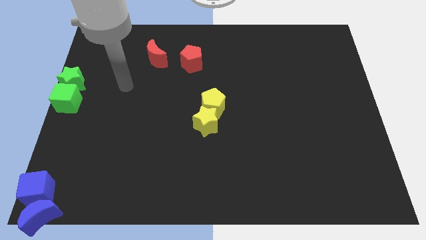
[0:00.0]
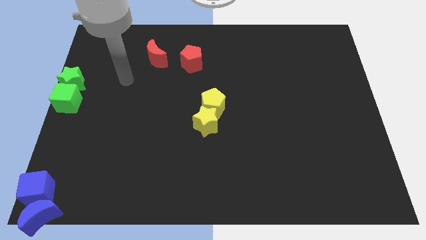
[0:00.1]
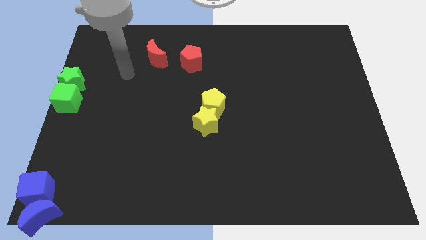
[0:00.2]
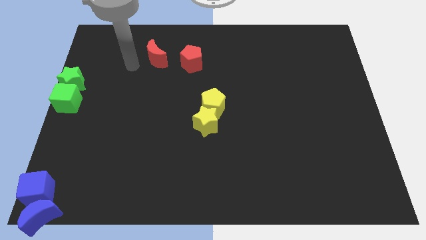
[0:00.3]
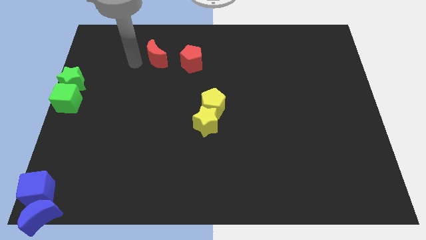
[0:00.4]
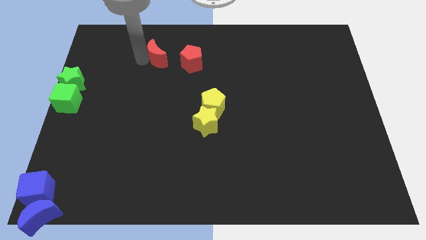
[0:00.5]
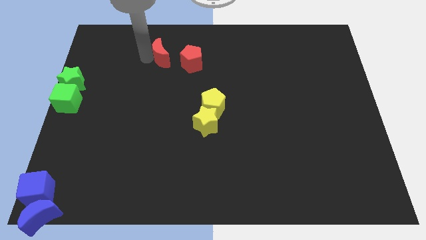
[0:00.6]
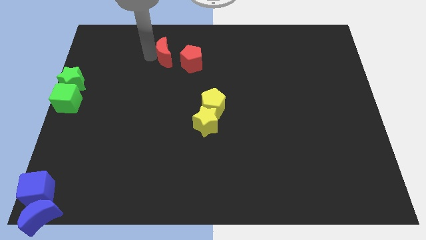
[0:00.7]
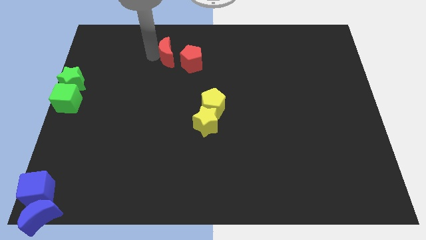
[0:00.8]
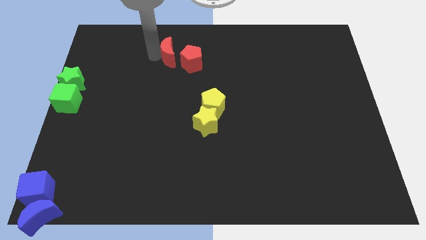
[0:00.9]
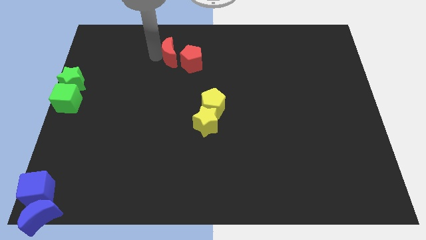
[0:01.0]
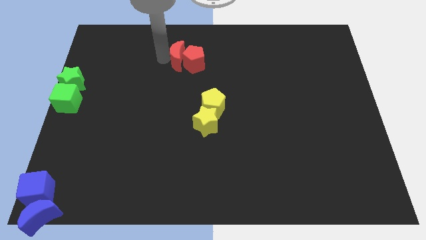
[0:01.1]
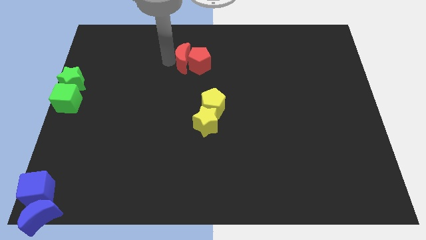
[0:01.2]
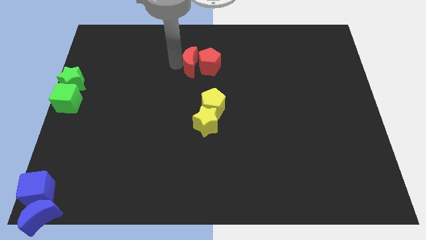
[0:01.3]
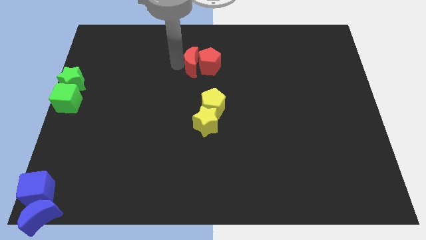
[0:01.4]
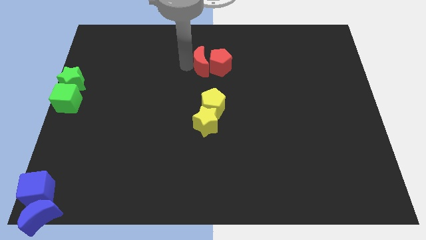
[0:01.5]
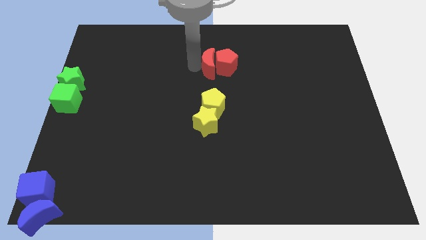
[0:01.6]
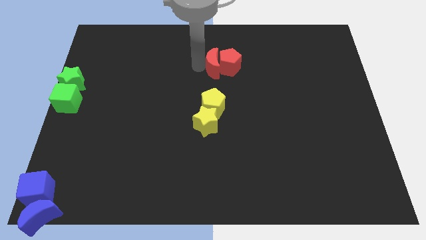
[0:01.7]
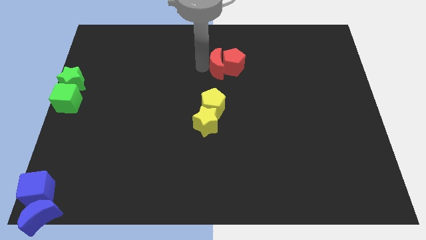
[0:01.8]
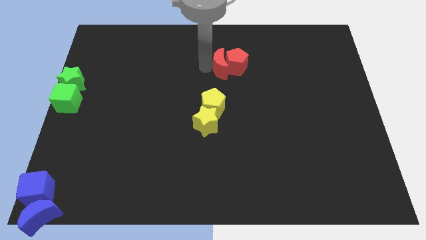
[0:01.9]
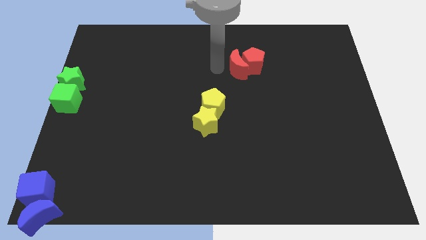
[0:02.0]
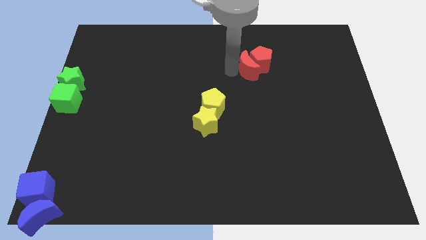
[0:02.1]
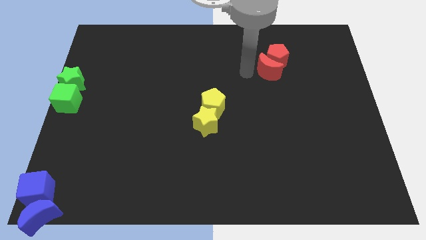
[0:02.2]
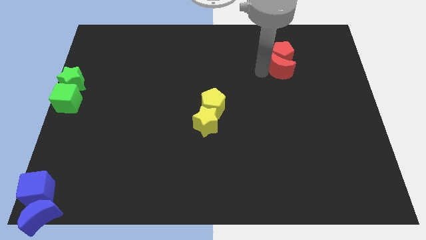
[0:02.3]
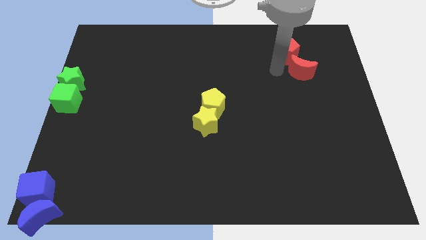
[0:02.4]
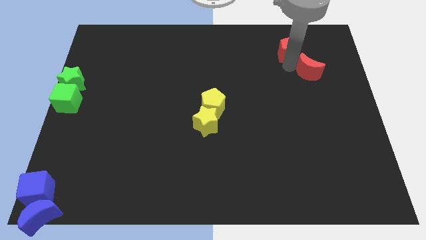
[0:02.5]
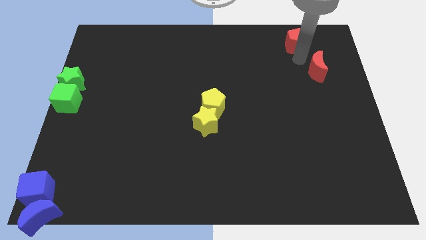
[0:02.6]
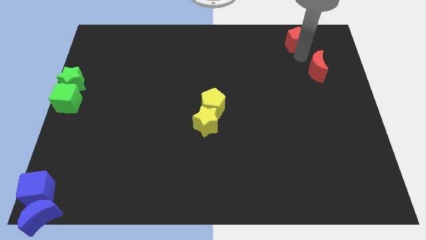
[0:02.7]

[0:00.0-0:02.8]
push red moon towards the top right corner

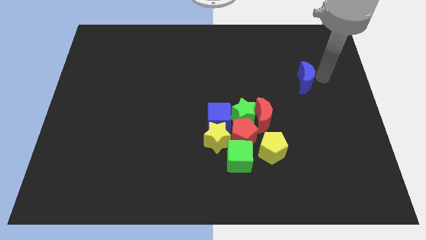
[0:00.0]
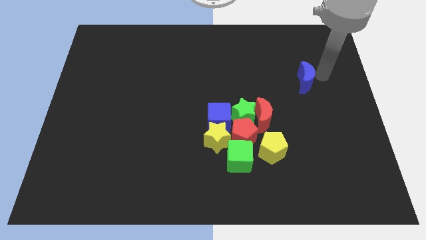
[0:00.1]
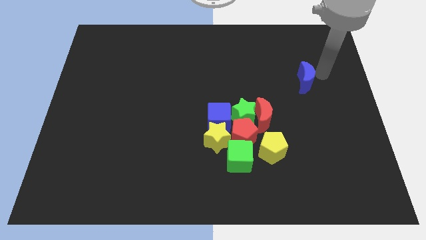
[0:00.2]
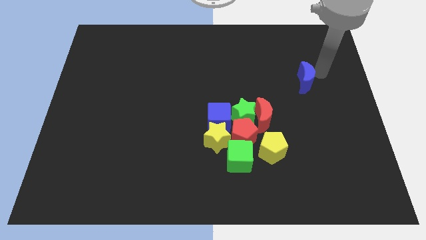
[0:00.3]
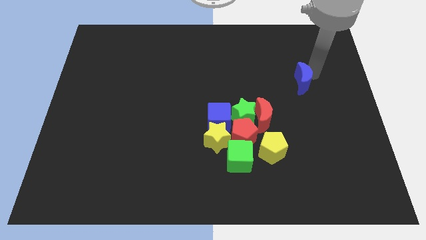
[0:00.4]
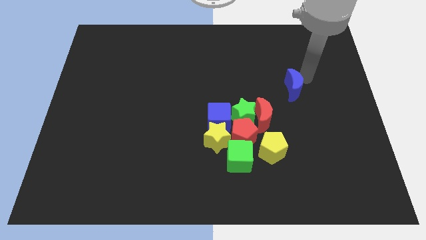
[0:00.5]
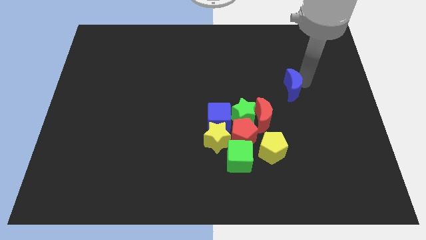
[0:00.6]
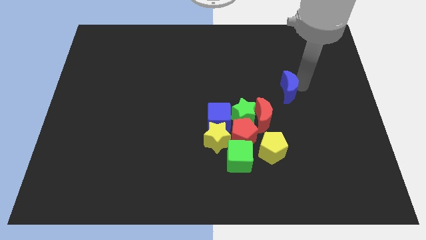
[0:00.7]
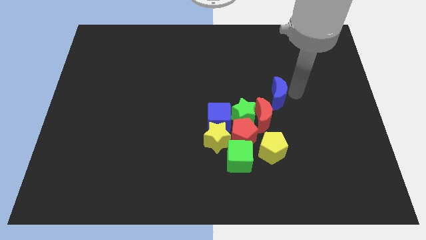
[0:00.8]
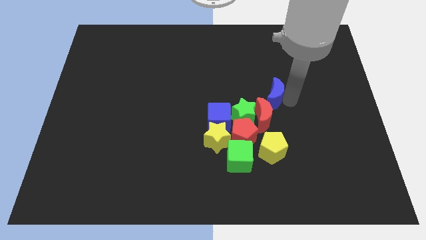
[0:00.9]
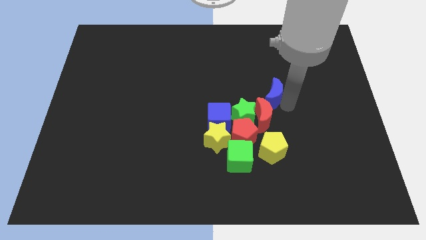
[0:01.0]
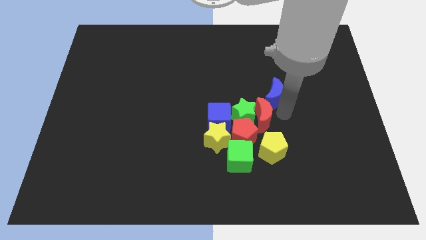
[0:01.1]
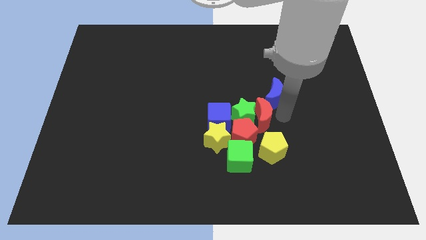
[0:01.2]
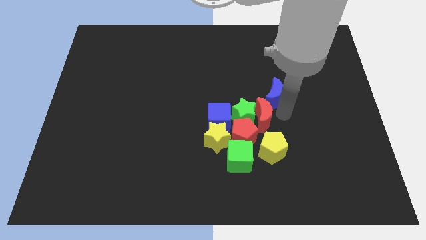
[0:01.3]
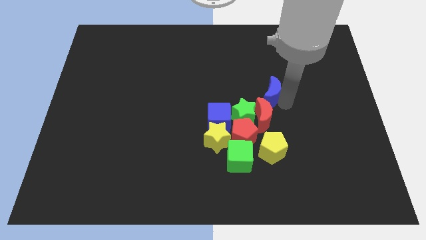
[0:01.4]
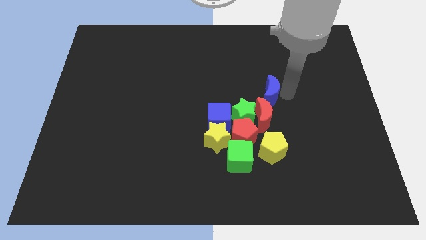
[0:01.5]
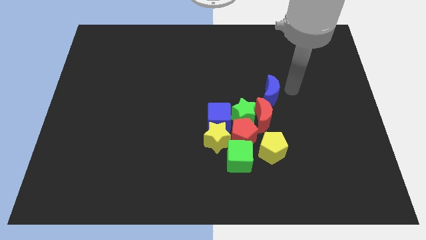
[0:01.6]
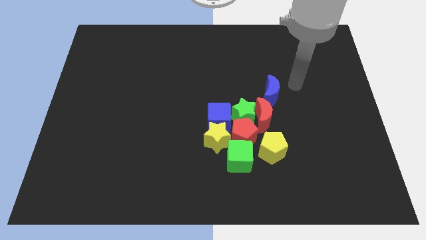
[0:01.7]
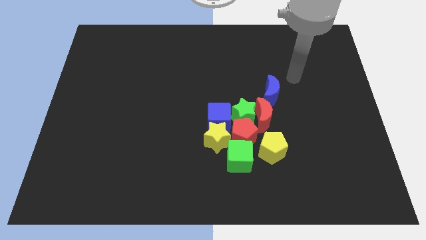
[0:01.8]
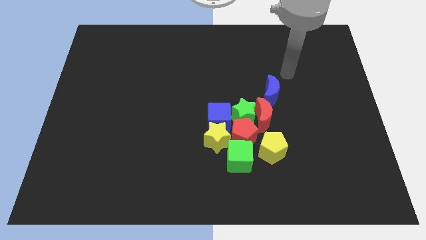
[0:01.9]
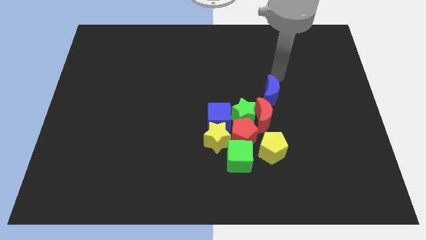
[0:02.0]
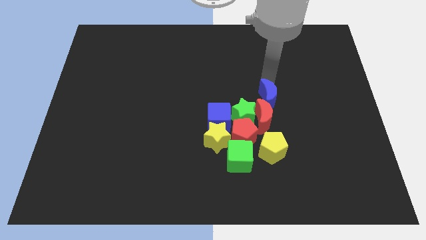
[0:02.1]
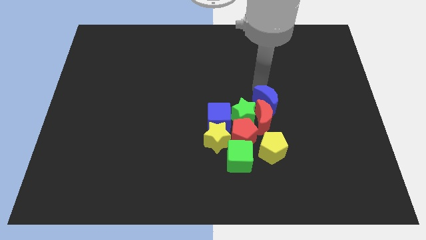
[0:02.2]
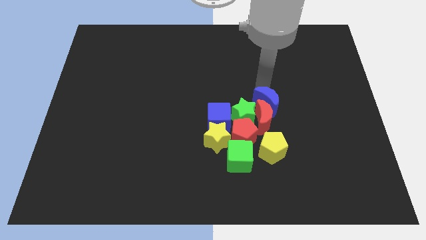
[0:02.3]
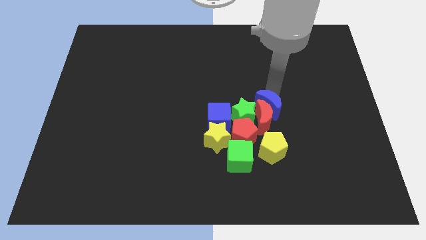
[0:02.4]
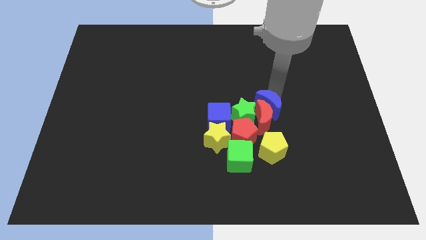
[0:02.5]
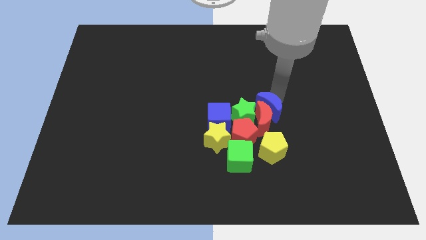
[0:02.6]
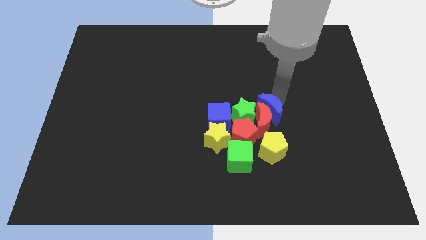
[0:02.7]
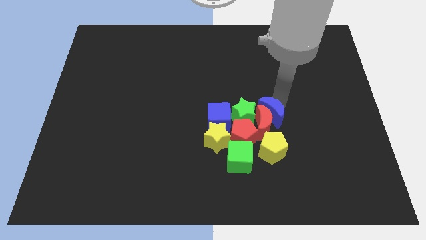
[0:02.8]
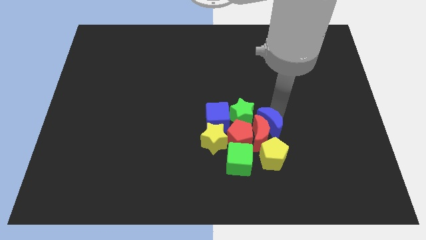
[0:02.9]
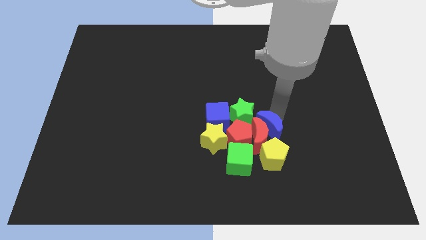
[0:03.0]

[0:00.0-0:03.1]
place blue moon to the top of the red moon

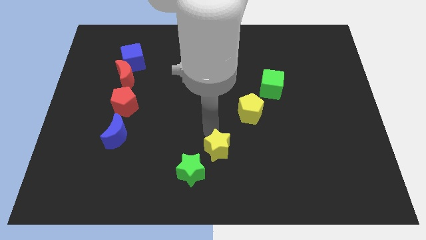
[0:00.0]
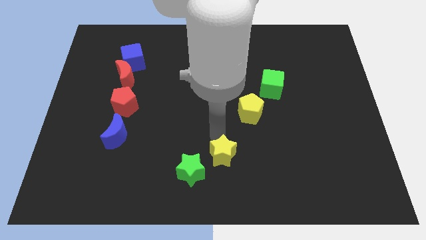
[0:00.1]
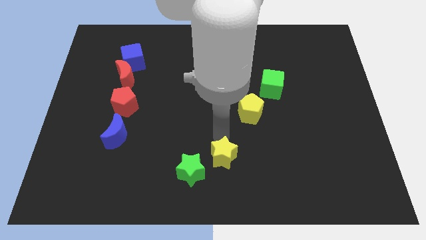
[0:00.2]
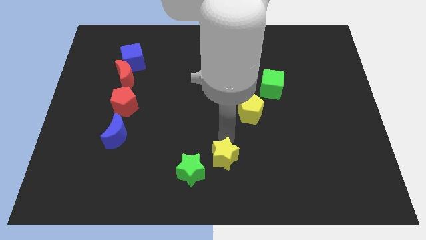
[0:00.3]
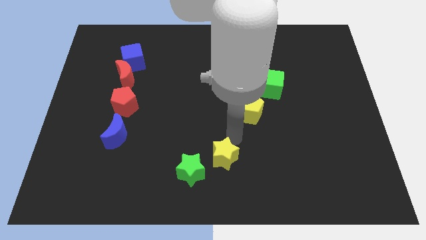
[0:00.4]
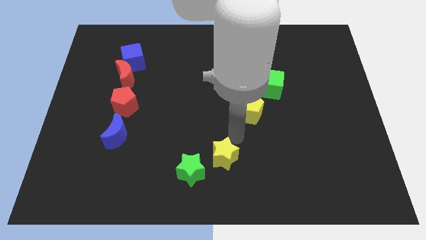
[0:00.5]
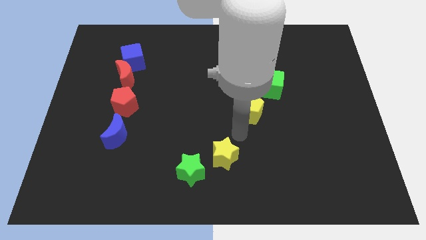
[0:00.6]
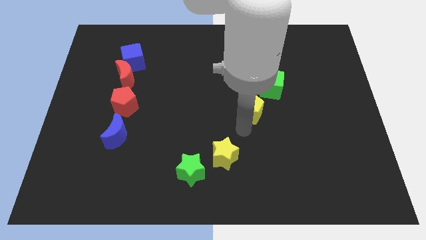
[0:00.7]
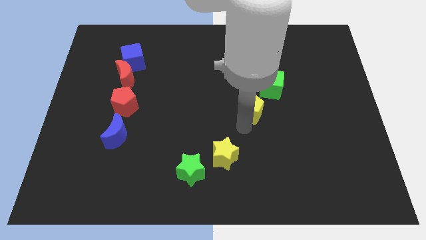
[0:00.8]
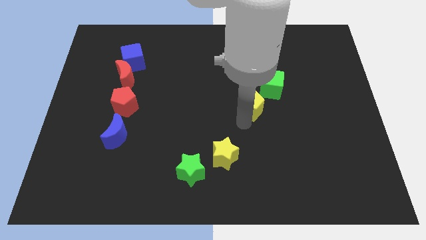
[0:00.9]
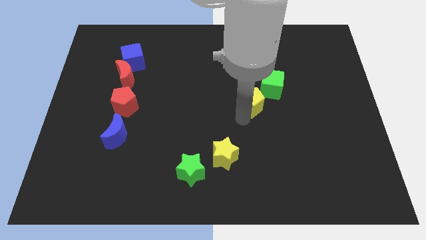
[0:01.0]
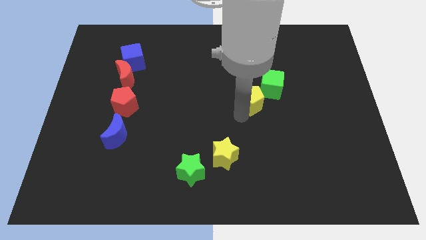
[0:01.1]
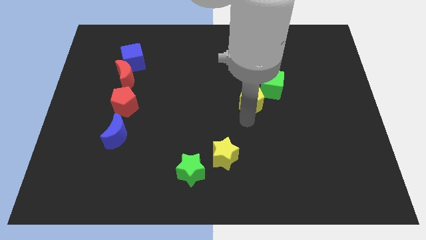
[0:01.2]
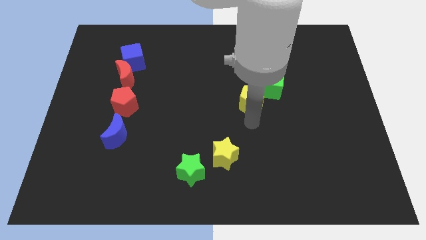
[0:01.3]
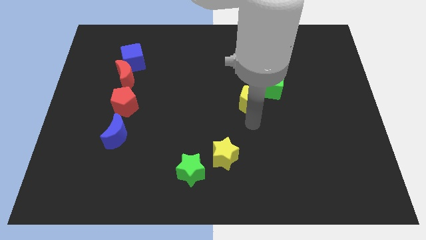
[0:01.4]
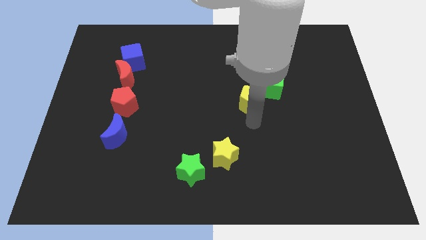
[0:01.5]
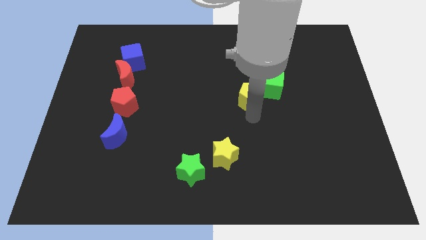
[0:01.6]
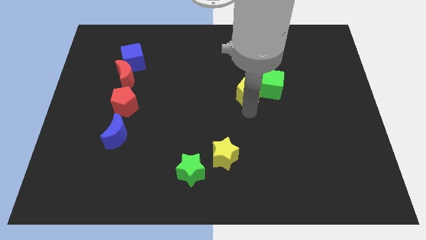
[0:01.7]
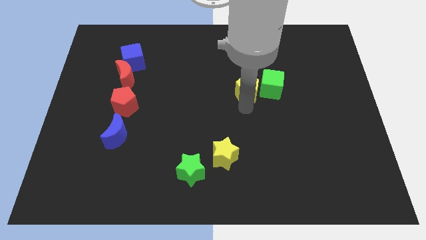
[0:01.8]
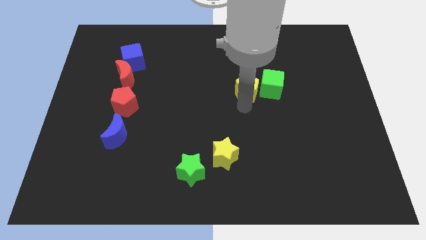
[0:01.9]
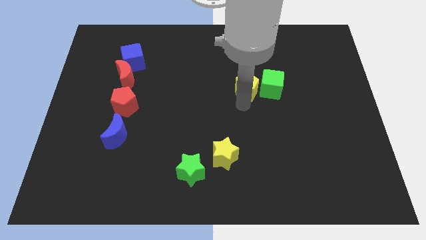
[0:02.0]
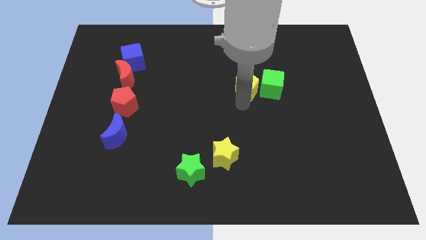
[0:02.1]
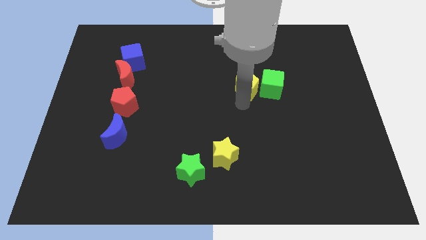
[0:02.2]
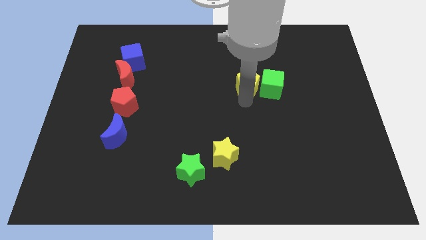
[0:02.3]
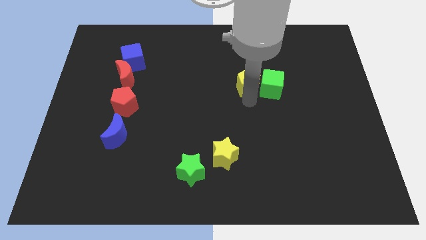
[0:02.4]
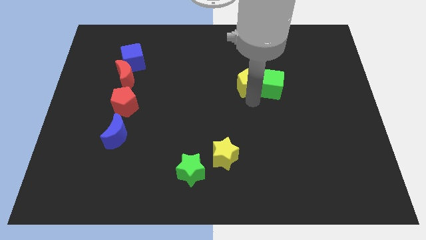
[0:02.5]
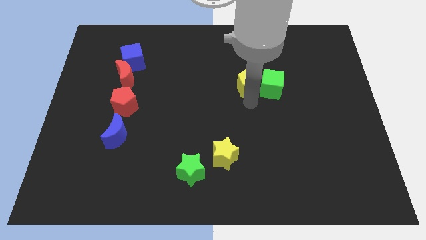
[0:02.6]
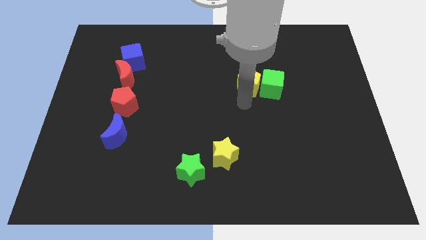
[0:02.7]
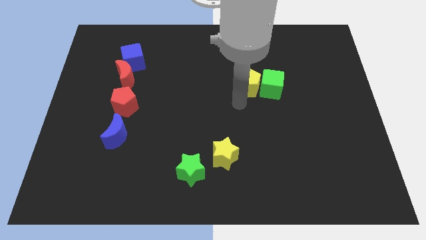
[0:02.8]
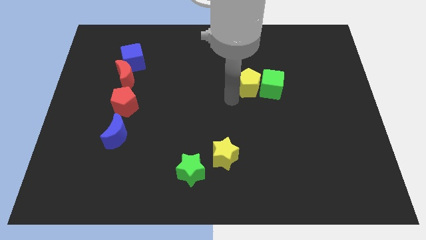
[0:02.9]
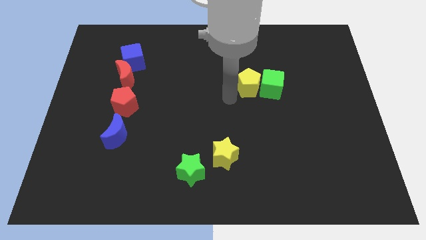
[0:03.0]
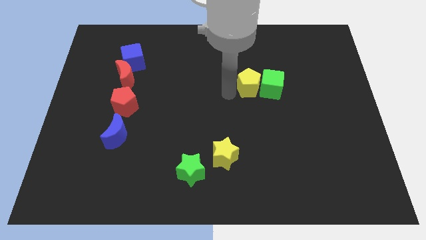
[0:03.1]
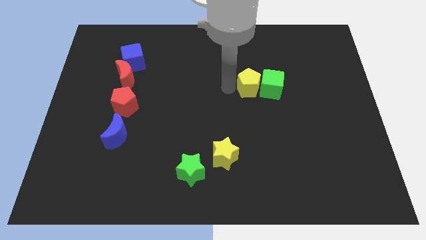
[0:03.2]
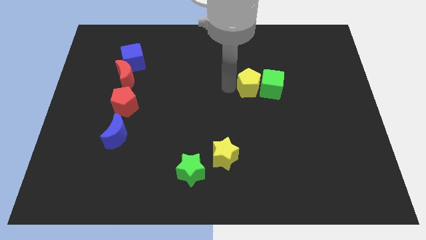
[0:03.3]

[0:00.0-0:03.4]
push the yellow pentagon to the left side of the green cube
